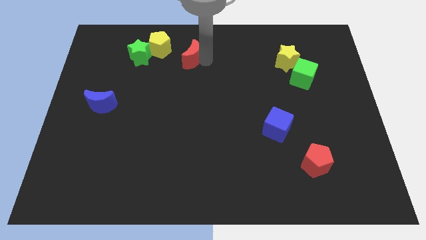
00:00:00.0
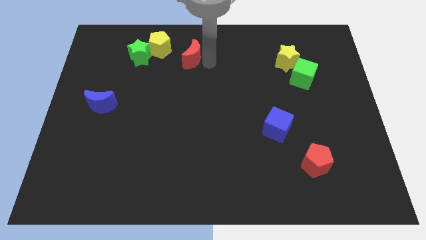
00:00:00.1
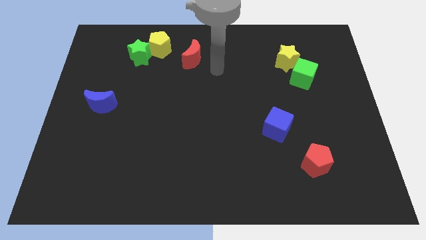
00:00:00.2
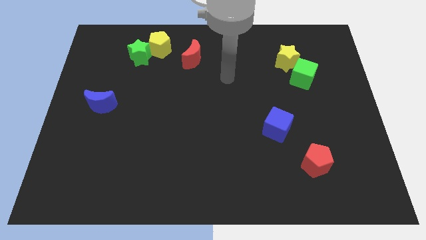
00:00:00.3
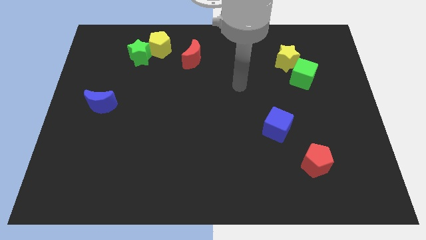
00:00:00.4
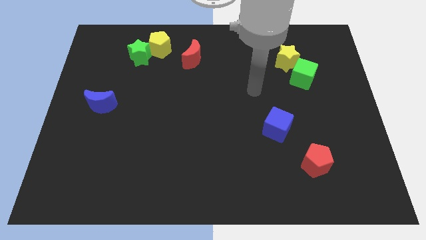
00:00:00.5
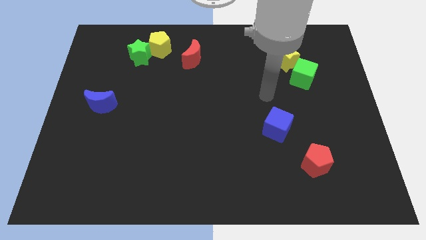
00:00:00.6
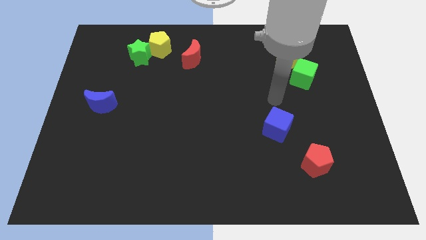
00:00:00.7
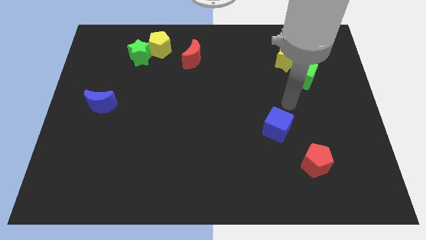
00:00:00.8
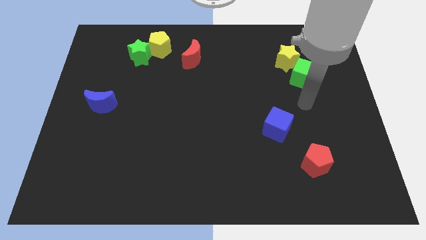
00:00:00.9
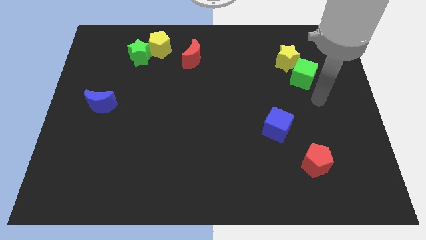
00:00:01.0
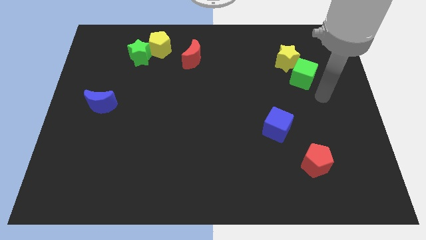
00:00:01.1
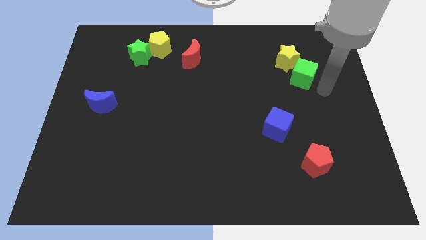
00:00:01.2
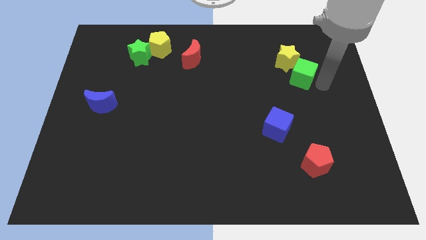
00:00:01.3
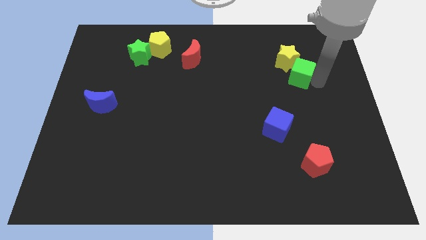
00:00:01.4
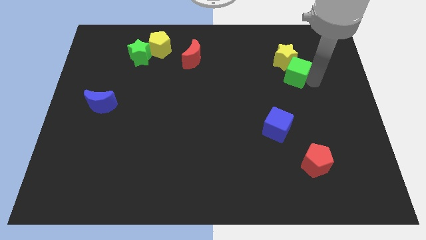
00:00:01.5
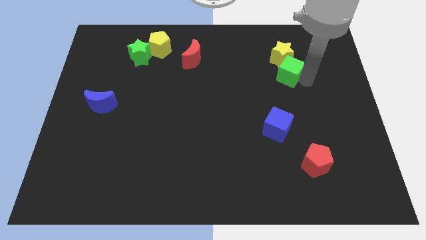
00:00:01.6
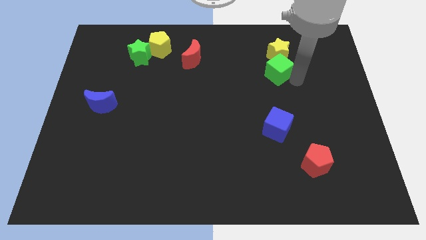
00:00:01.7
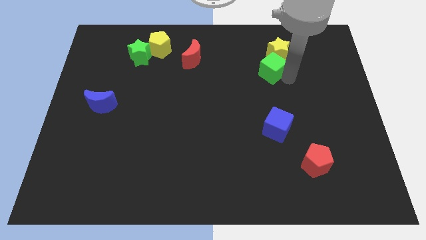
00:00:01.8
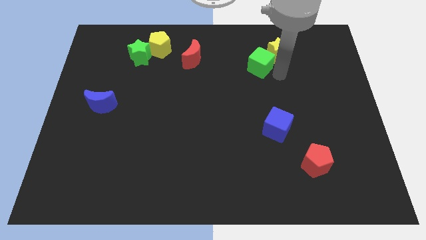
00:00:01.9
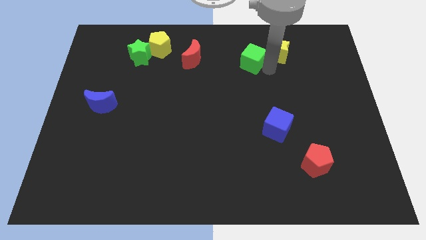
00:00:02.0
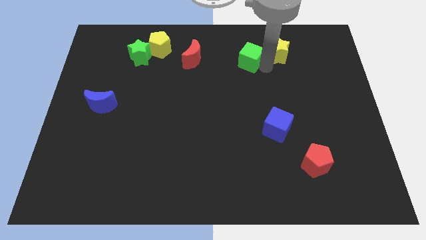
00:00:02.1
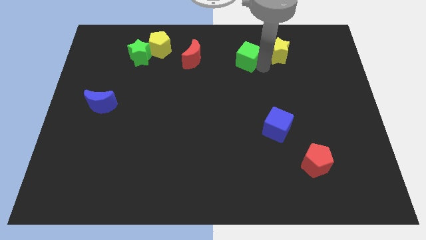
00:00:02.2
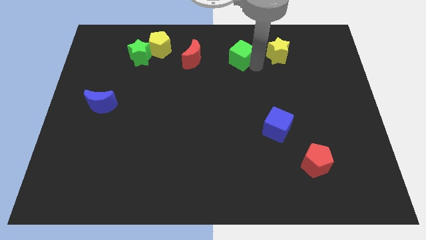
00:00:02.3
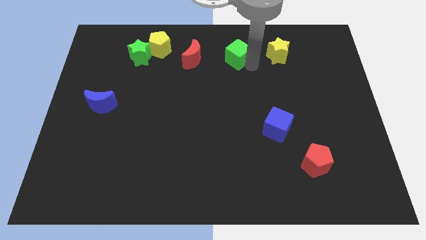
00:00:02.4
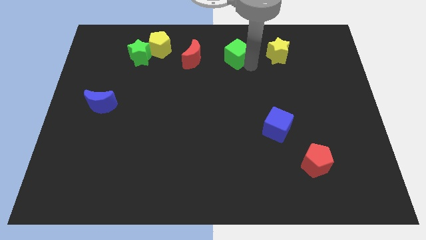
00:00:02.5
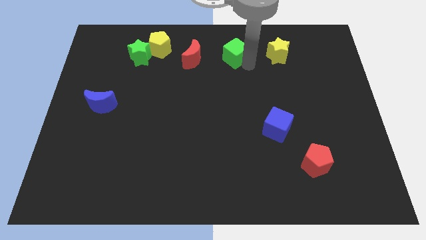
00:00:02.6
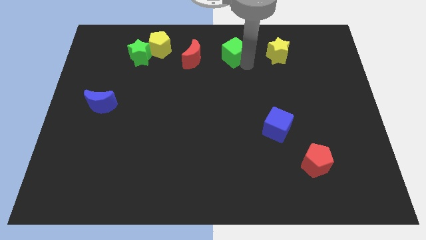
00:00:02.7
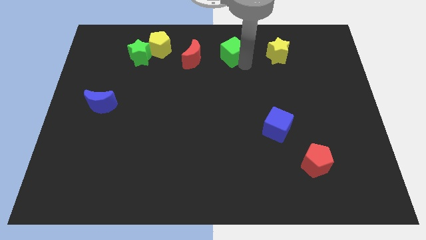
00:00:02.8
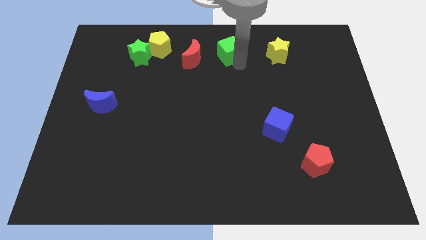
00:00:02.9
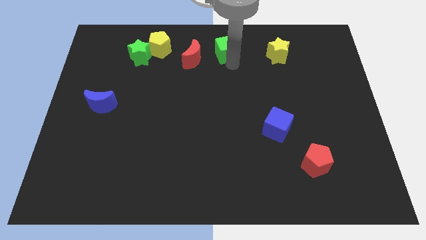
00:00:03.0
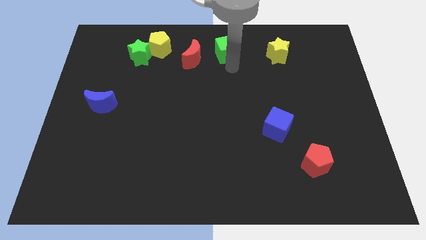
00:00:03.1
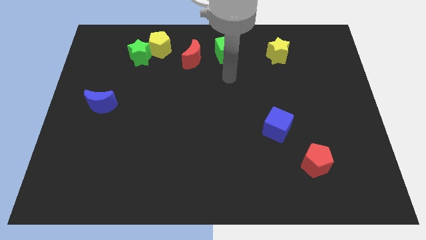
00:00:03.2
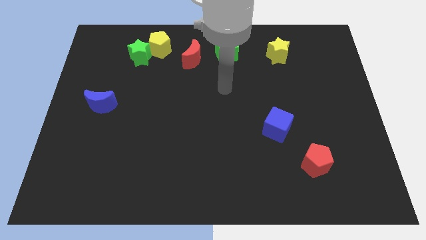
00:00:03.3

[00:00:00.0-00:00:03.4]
move the green cube in between red crescent and yellow star

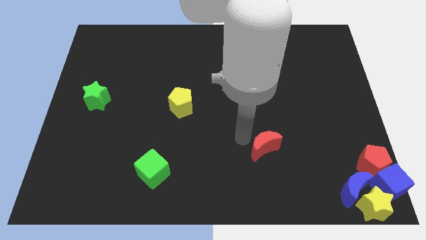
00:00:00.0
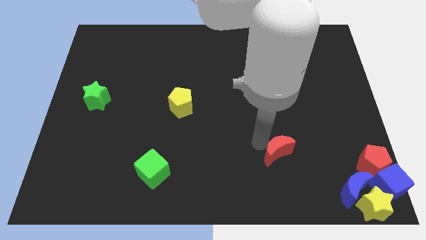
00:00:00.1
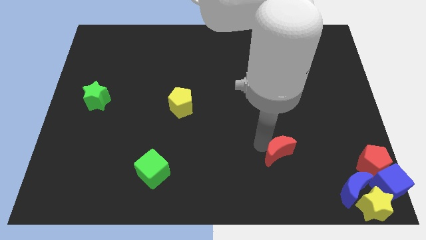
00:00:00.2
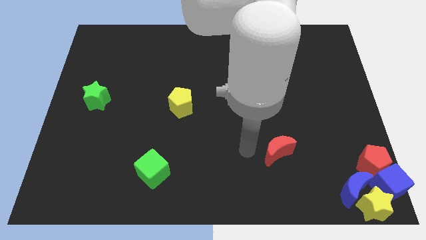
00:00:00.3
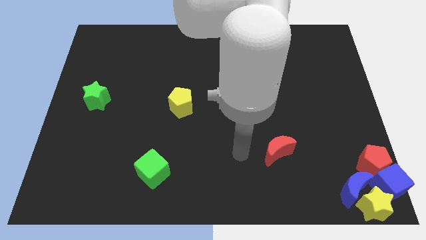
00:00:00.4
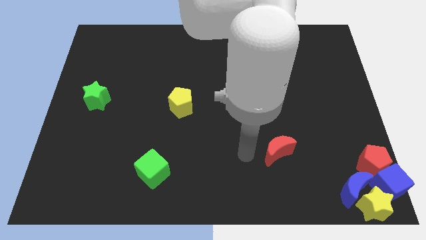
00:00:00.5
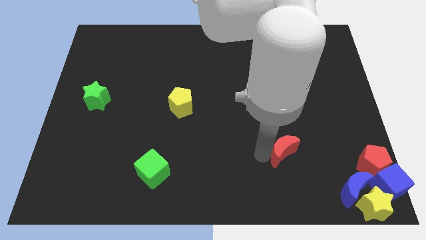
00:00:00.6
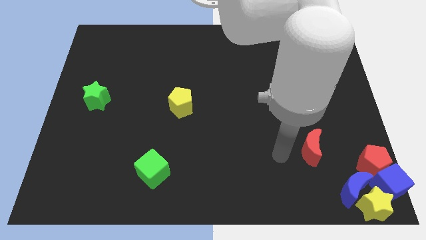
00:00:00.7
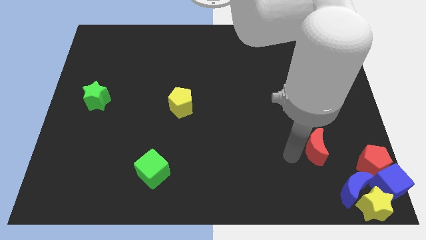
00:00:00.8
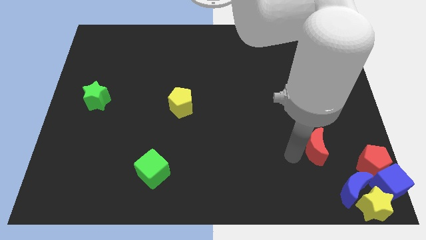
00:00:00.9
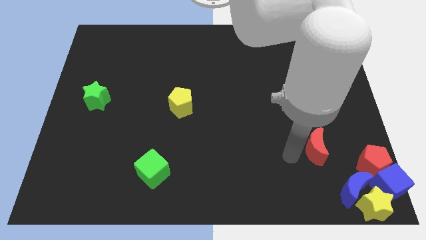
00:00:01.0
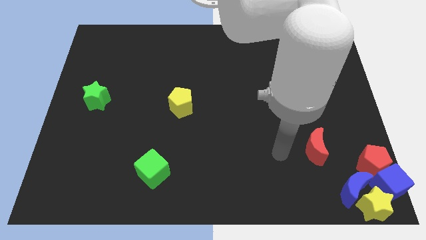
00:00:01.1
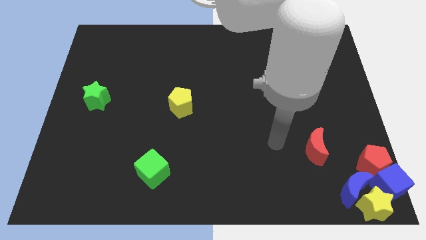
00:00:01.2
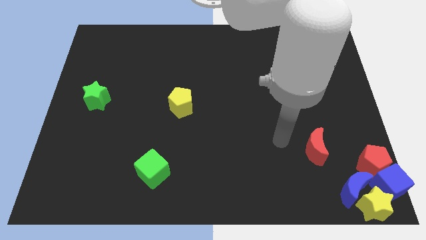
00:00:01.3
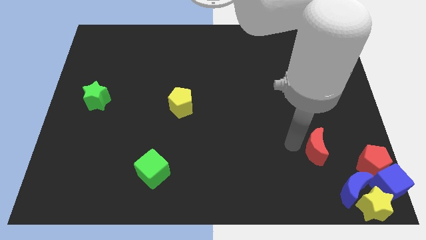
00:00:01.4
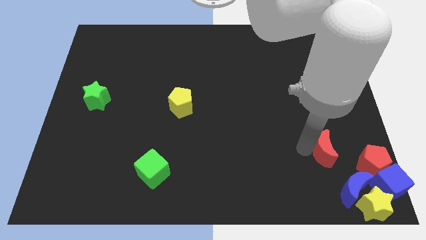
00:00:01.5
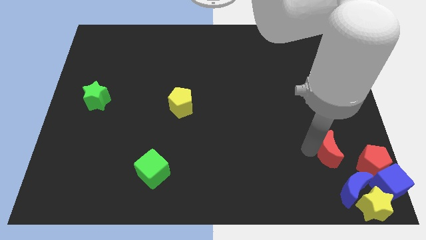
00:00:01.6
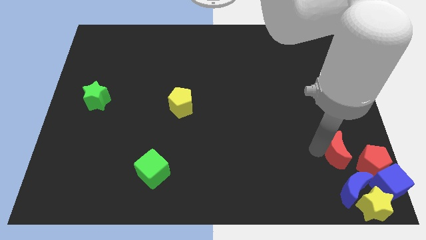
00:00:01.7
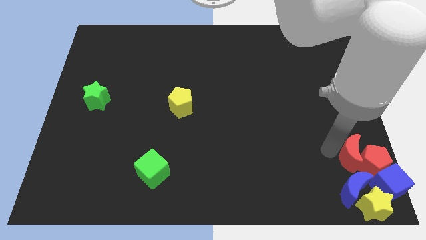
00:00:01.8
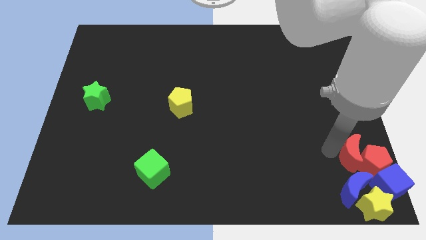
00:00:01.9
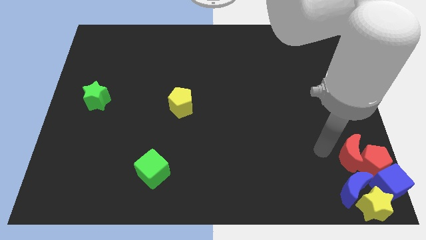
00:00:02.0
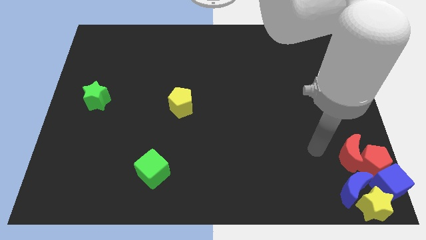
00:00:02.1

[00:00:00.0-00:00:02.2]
place the red moon to left side of the red pentagon

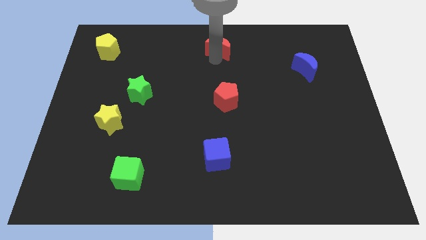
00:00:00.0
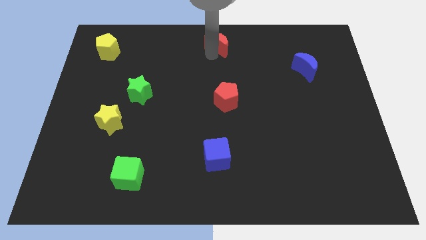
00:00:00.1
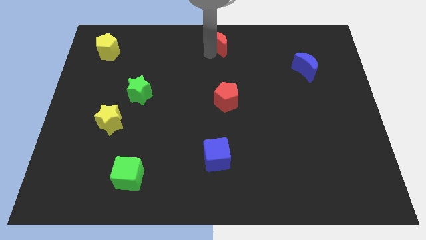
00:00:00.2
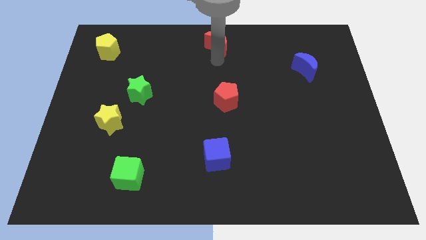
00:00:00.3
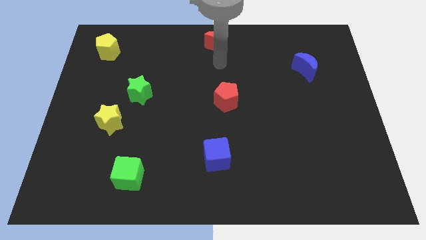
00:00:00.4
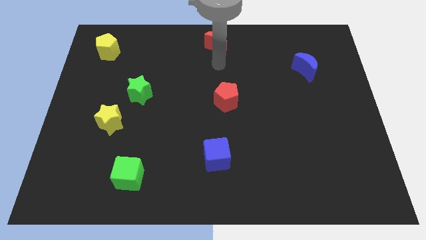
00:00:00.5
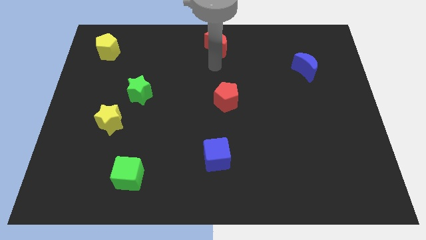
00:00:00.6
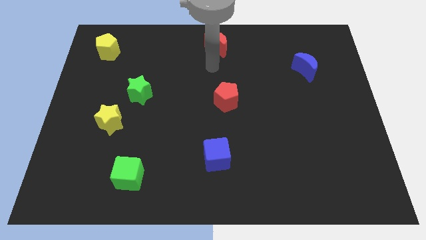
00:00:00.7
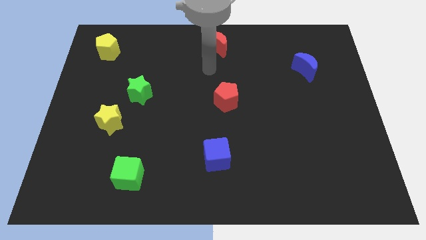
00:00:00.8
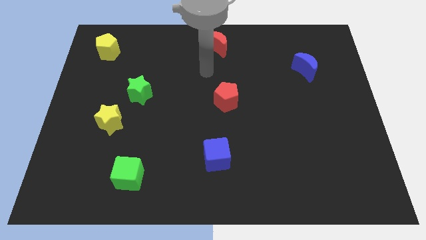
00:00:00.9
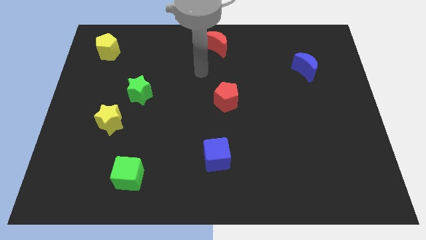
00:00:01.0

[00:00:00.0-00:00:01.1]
slightly push the red crescent towards the top center

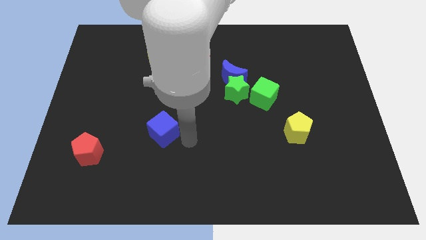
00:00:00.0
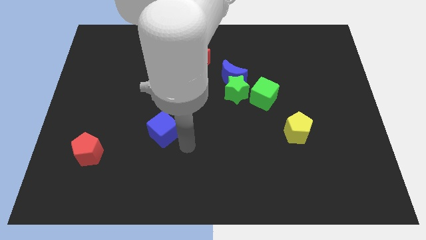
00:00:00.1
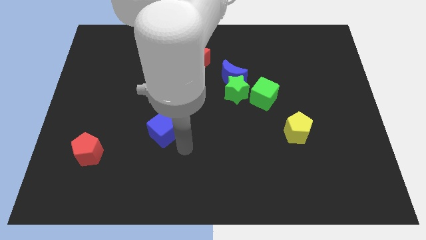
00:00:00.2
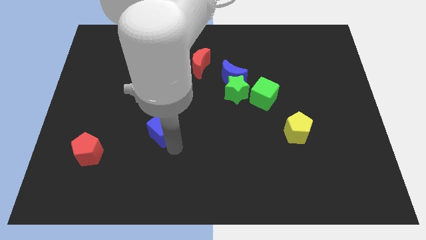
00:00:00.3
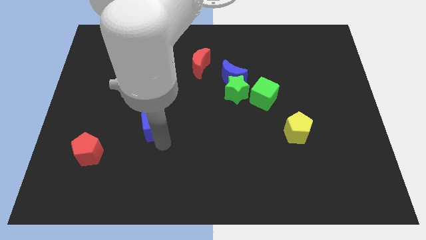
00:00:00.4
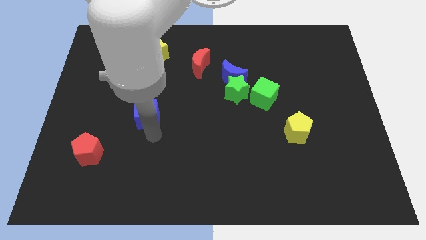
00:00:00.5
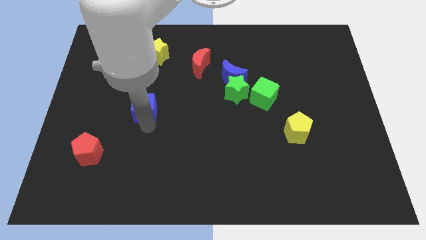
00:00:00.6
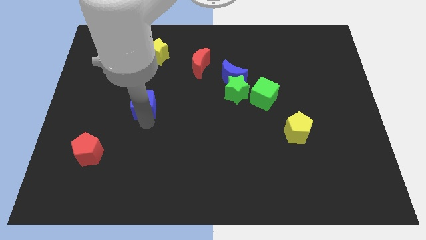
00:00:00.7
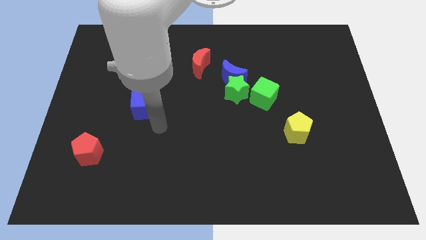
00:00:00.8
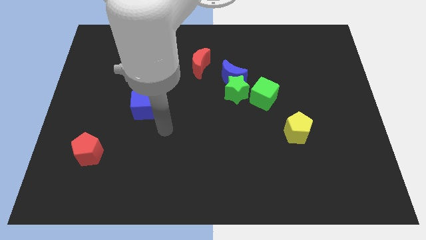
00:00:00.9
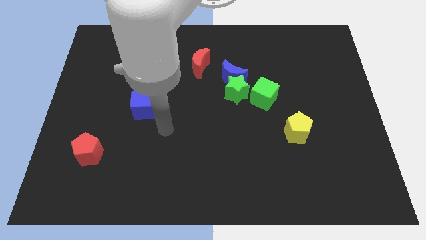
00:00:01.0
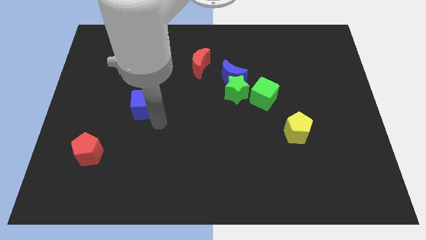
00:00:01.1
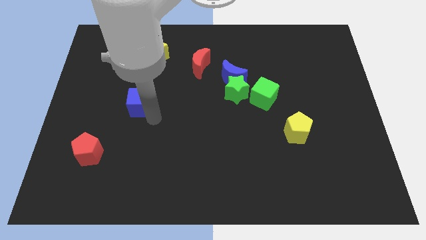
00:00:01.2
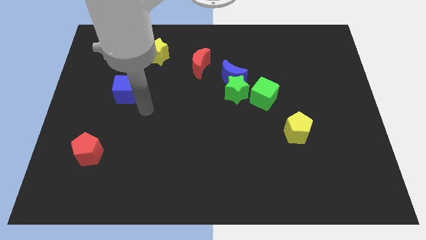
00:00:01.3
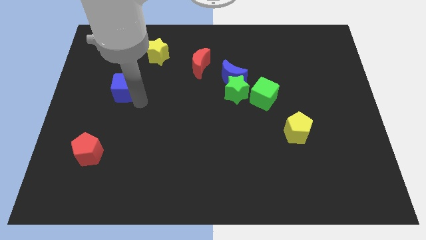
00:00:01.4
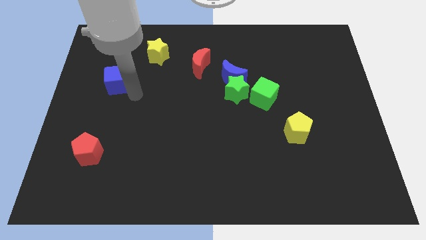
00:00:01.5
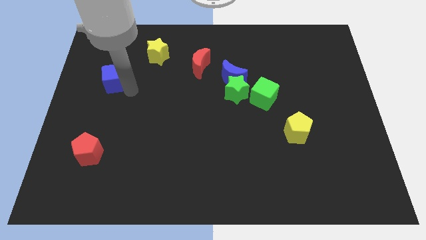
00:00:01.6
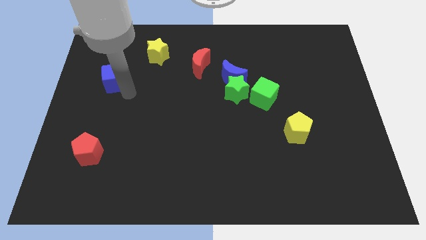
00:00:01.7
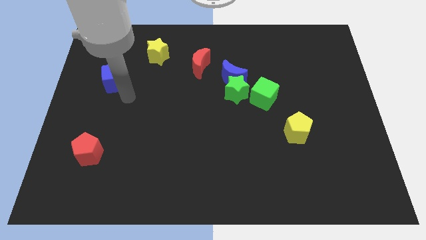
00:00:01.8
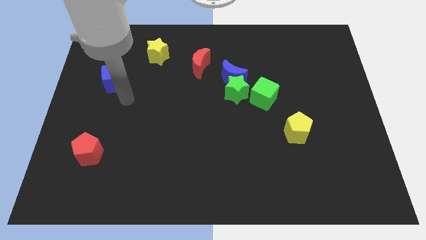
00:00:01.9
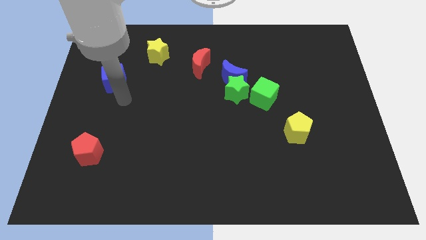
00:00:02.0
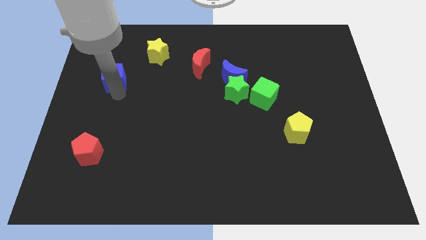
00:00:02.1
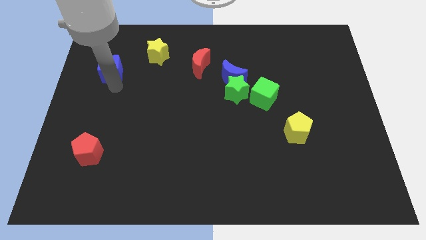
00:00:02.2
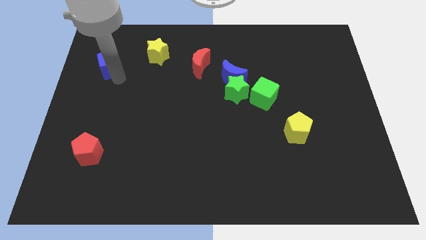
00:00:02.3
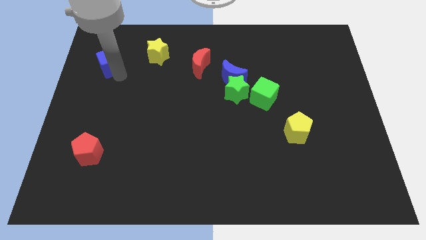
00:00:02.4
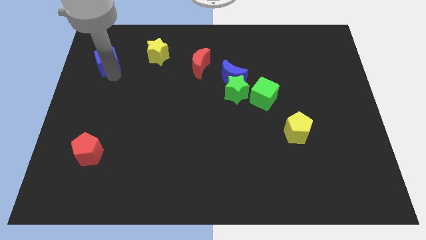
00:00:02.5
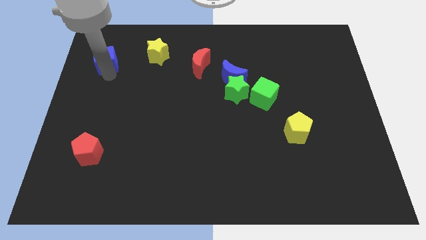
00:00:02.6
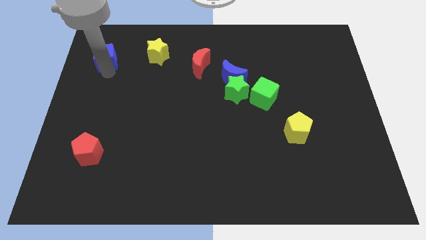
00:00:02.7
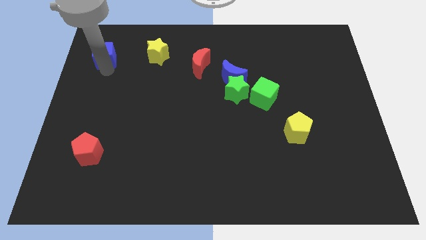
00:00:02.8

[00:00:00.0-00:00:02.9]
place the blue cube to the left of the yellow star
